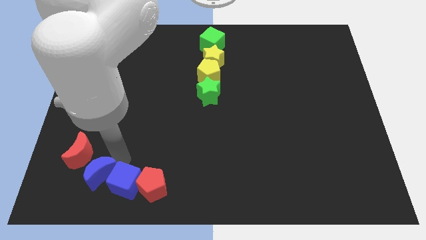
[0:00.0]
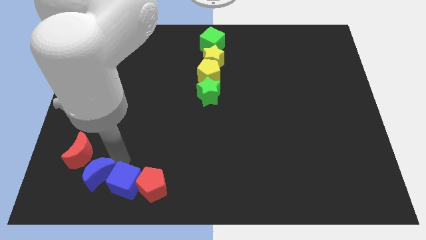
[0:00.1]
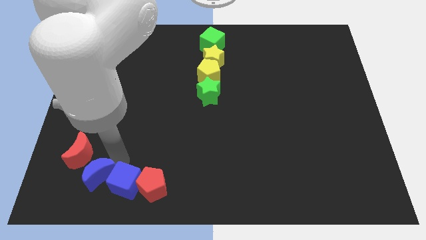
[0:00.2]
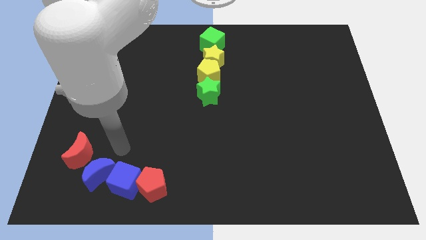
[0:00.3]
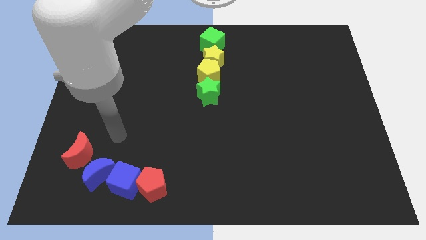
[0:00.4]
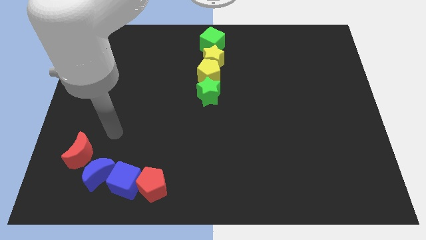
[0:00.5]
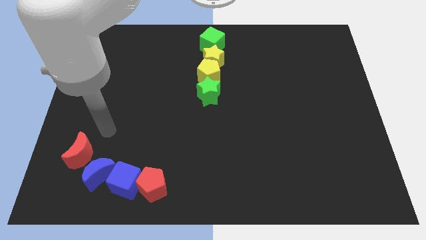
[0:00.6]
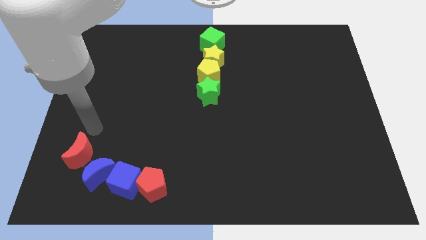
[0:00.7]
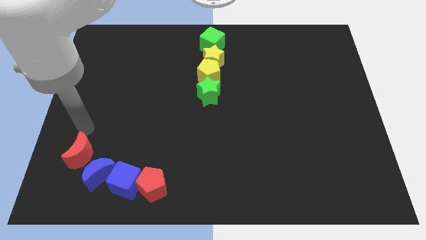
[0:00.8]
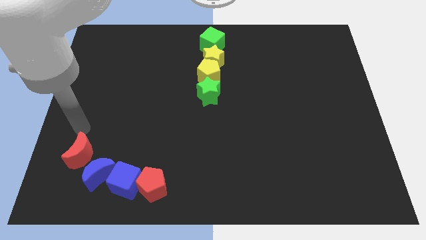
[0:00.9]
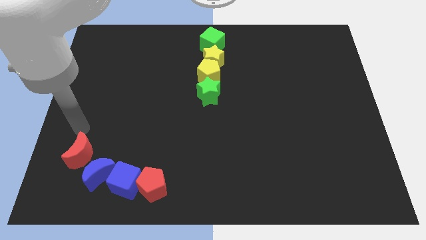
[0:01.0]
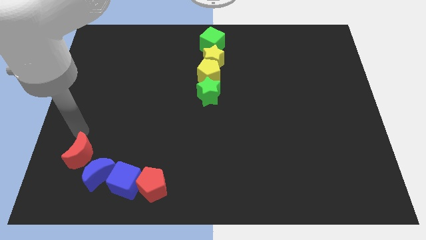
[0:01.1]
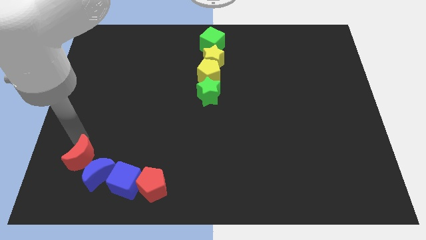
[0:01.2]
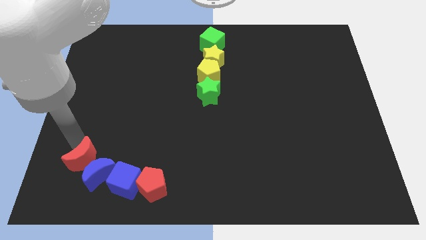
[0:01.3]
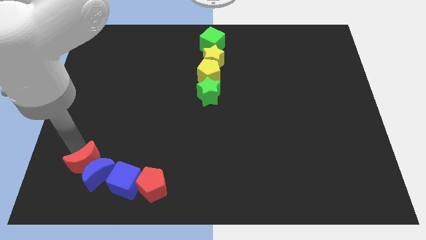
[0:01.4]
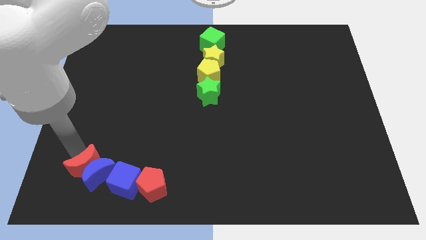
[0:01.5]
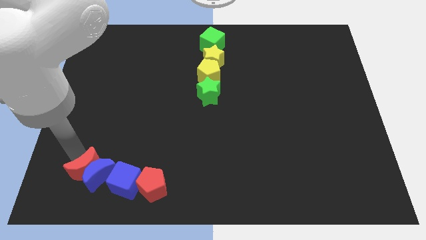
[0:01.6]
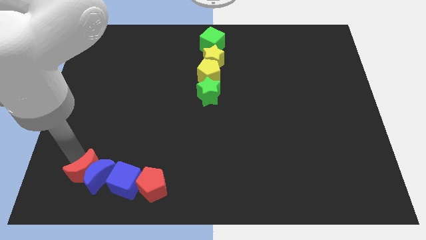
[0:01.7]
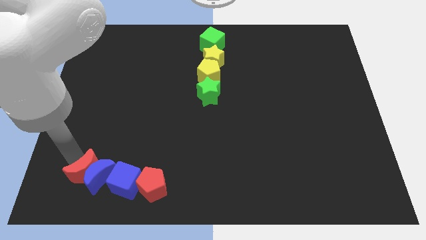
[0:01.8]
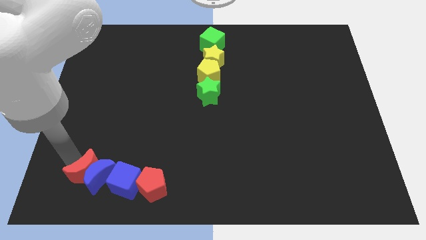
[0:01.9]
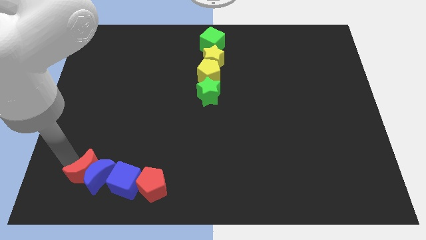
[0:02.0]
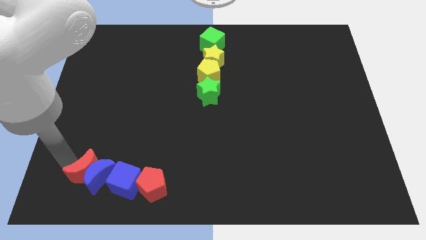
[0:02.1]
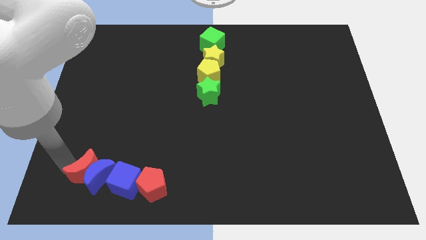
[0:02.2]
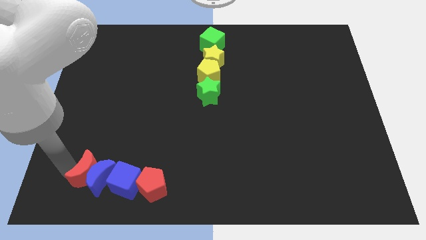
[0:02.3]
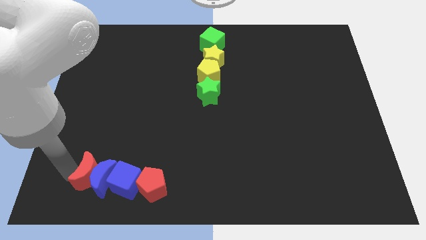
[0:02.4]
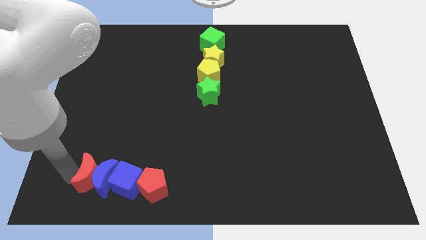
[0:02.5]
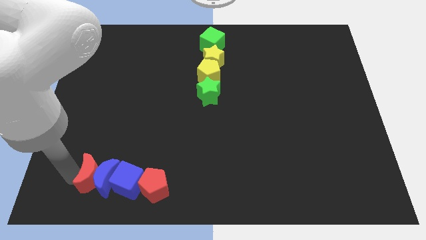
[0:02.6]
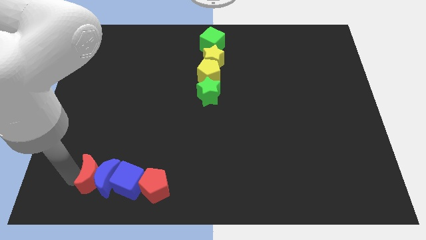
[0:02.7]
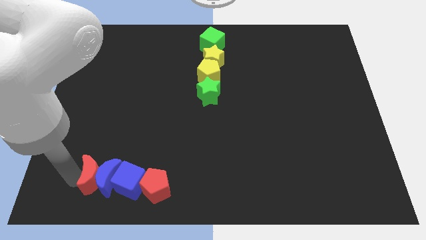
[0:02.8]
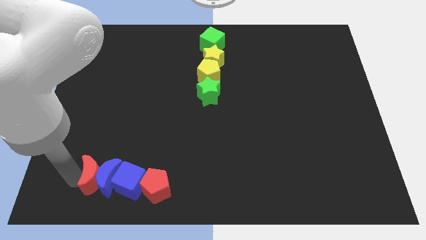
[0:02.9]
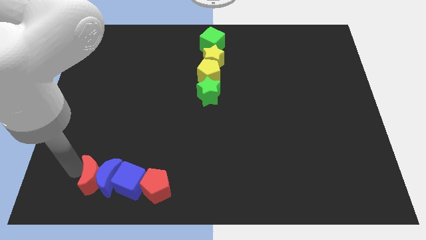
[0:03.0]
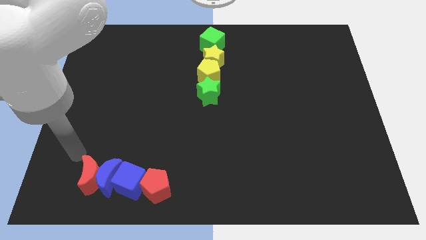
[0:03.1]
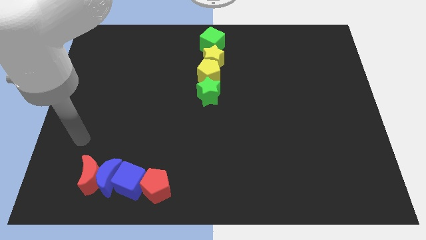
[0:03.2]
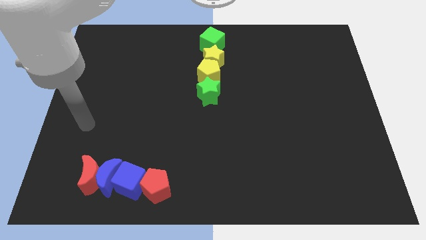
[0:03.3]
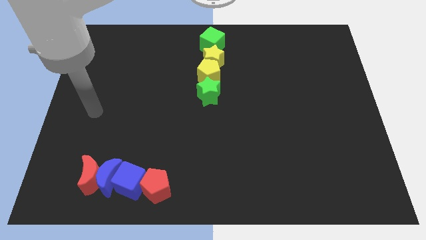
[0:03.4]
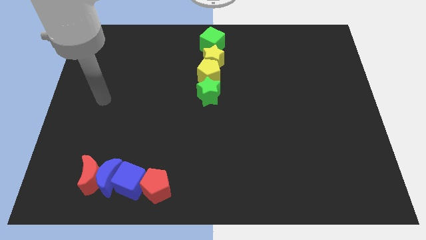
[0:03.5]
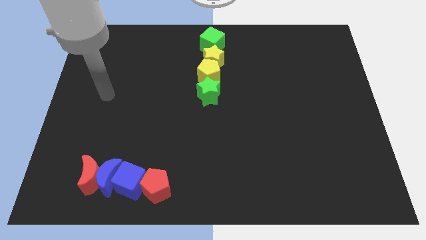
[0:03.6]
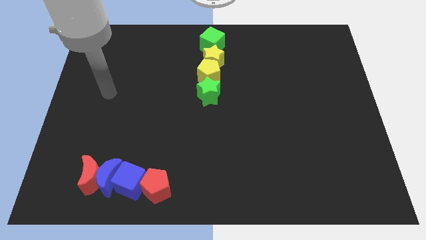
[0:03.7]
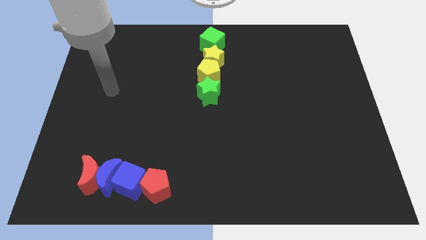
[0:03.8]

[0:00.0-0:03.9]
move red crescent close to the blue crescent

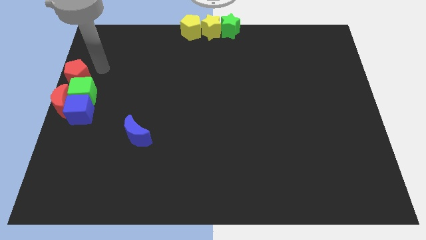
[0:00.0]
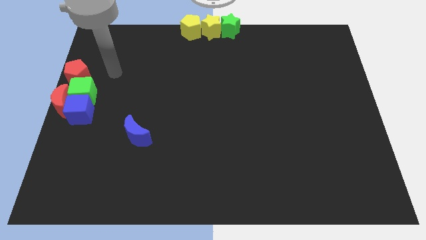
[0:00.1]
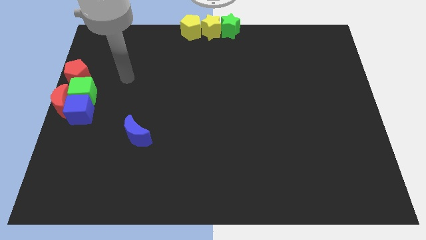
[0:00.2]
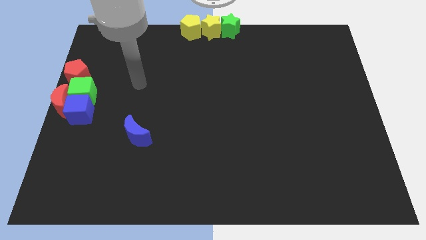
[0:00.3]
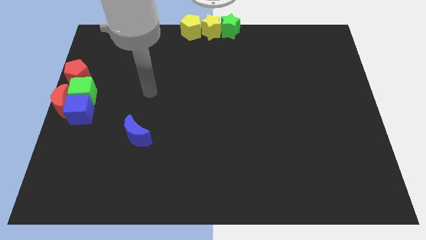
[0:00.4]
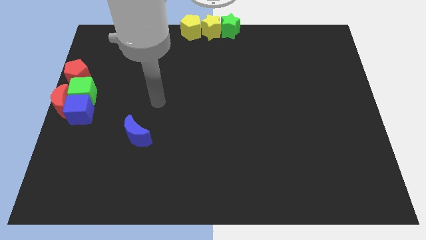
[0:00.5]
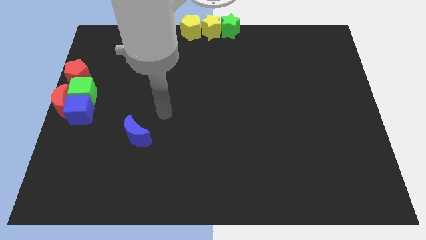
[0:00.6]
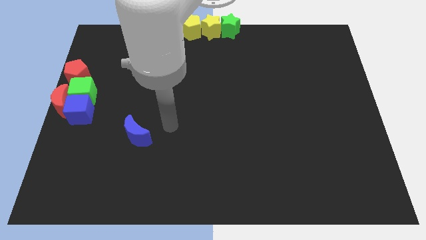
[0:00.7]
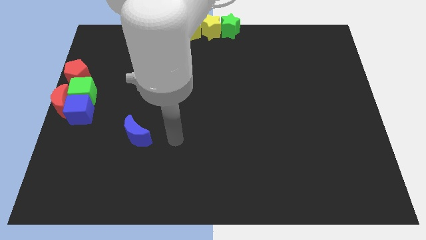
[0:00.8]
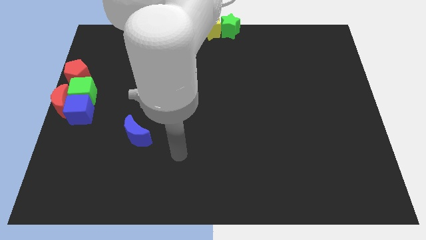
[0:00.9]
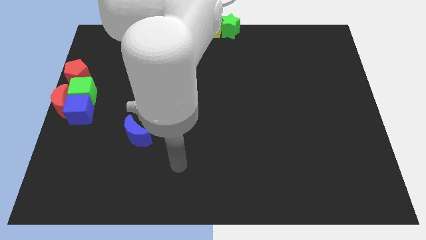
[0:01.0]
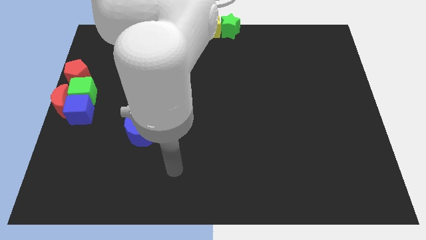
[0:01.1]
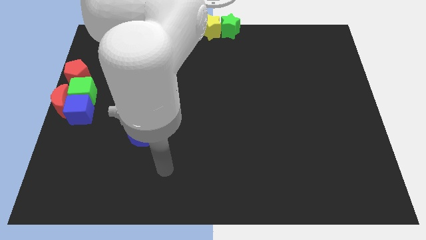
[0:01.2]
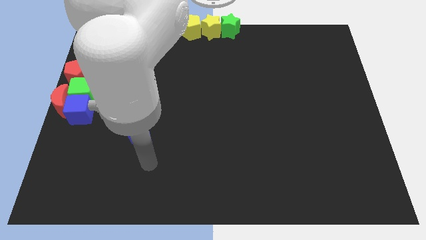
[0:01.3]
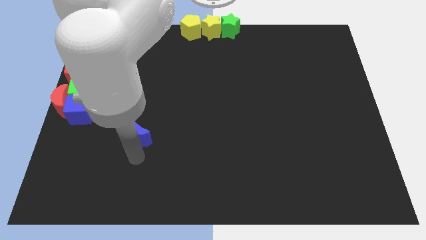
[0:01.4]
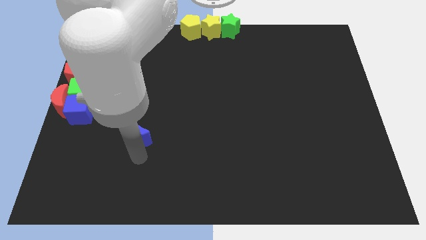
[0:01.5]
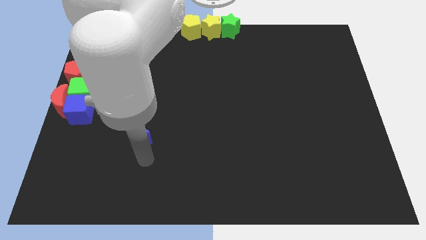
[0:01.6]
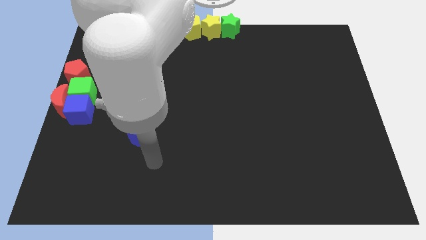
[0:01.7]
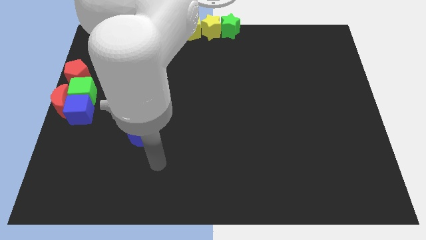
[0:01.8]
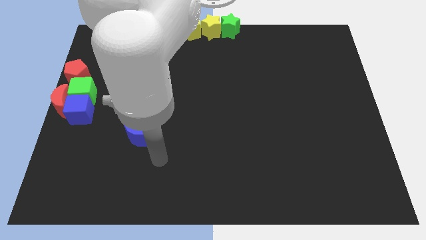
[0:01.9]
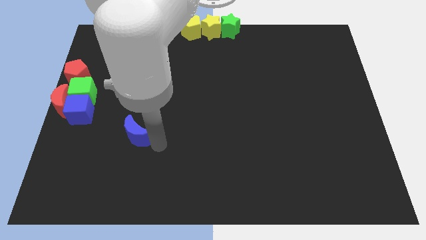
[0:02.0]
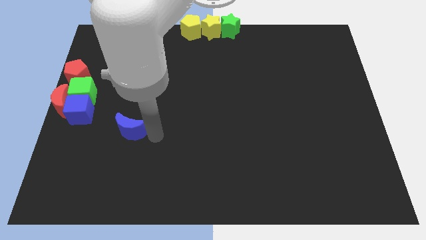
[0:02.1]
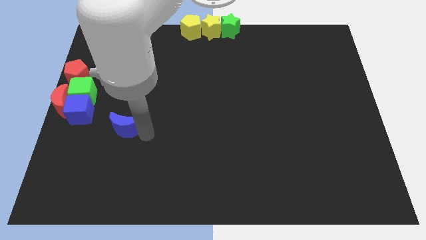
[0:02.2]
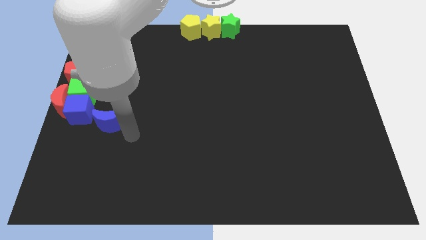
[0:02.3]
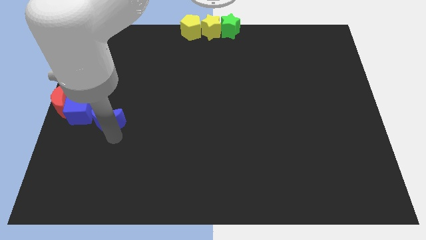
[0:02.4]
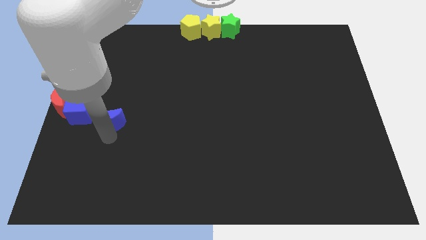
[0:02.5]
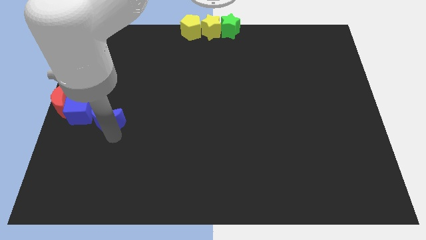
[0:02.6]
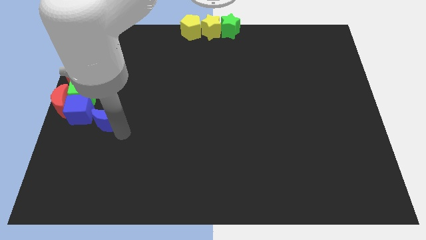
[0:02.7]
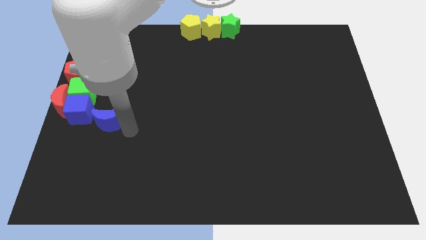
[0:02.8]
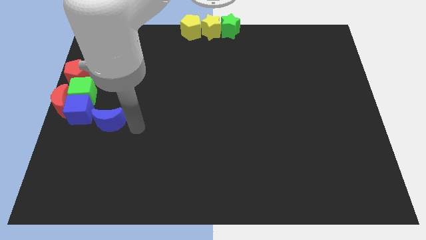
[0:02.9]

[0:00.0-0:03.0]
place the blue crescent right to the blue cube

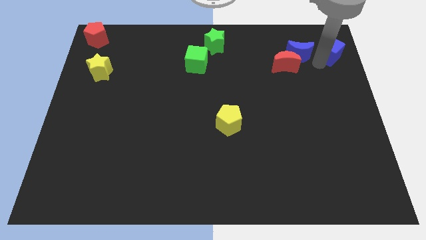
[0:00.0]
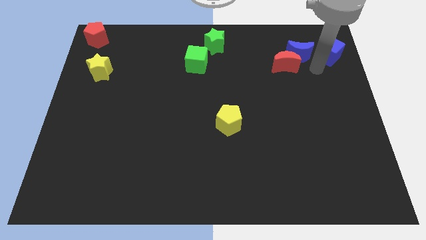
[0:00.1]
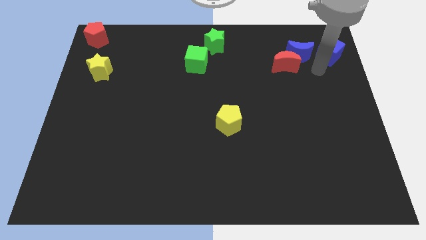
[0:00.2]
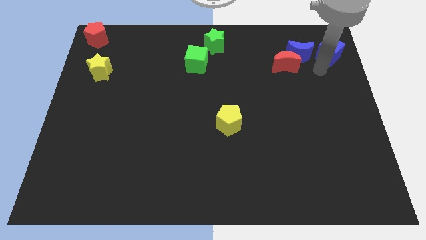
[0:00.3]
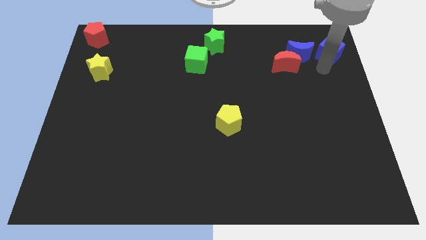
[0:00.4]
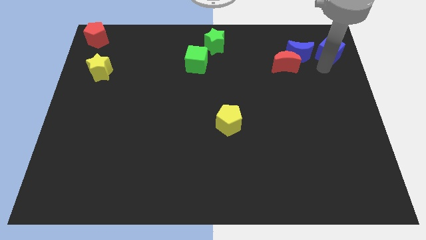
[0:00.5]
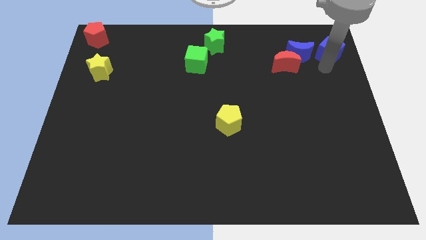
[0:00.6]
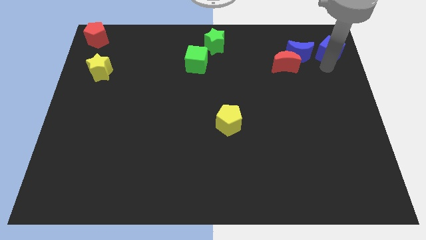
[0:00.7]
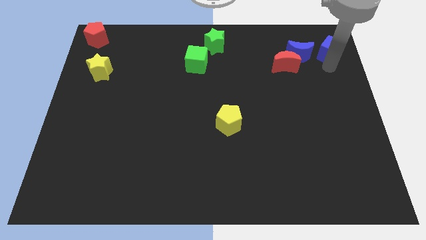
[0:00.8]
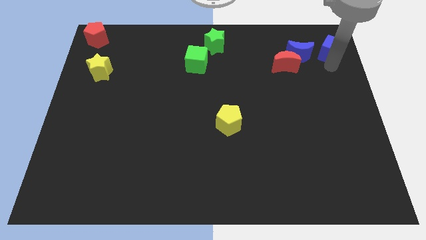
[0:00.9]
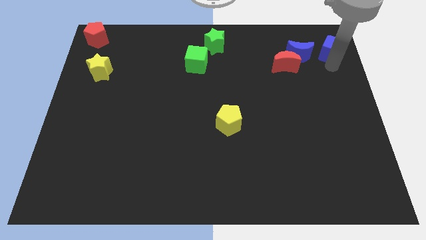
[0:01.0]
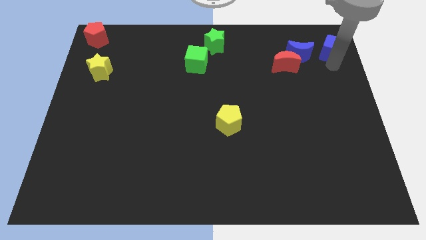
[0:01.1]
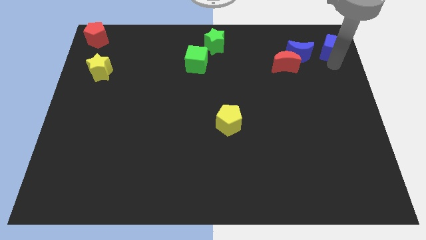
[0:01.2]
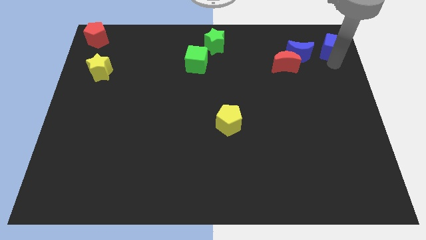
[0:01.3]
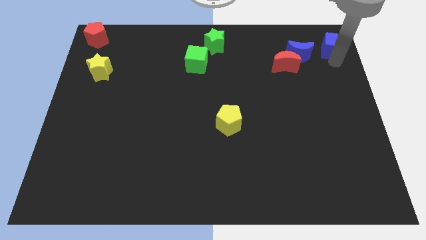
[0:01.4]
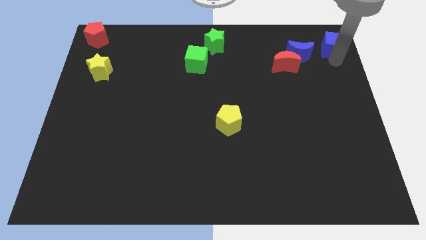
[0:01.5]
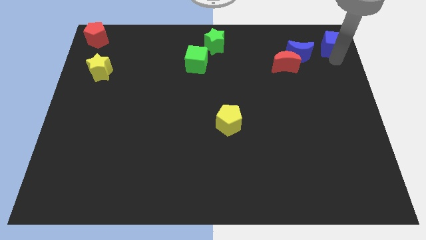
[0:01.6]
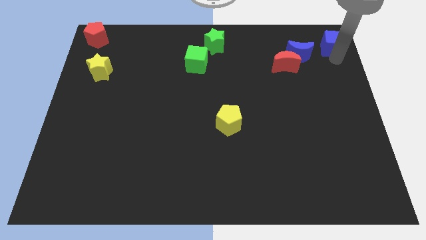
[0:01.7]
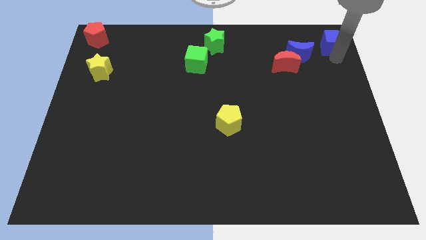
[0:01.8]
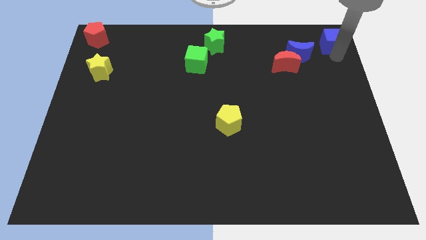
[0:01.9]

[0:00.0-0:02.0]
place the blue cube to the top right
